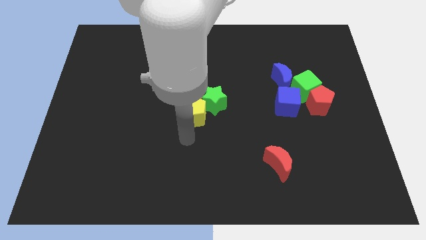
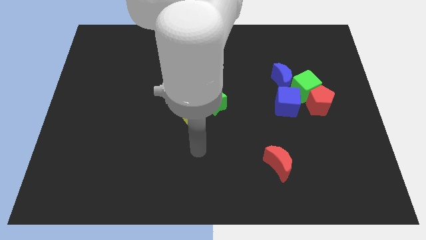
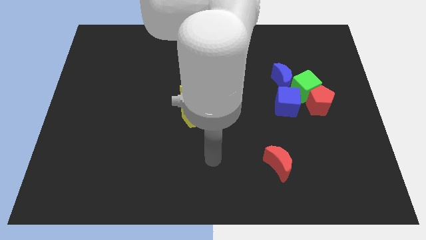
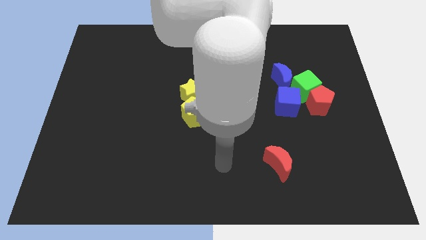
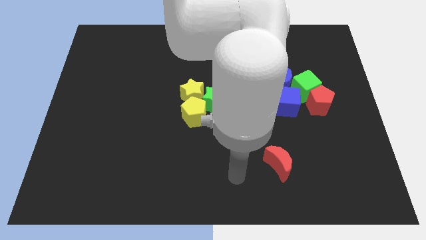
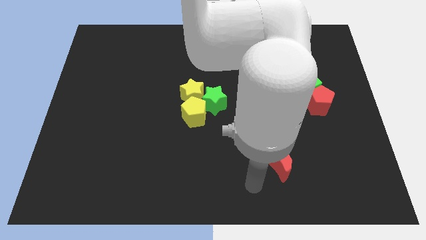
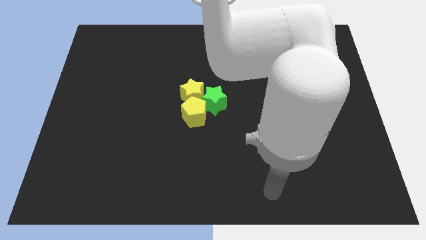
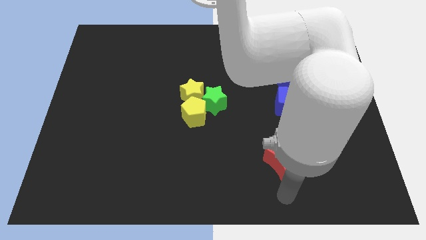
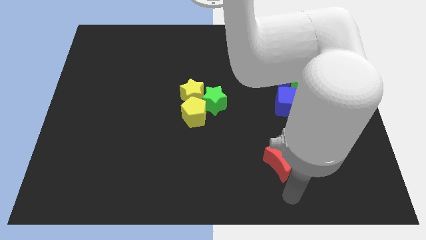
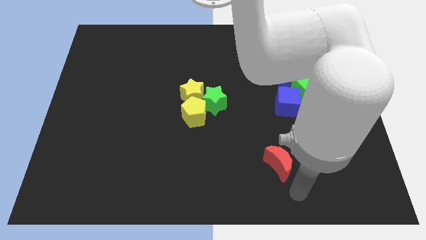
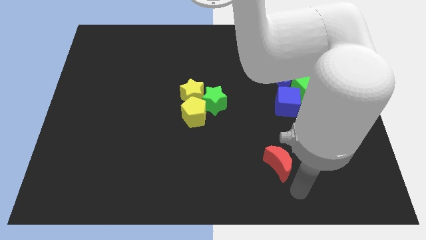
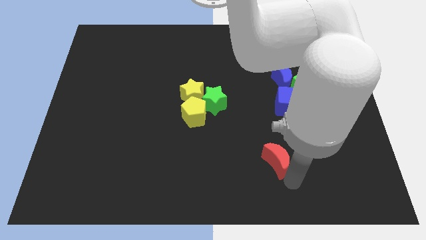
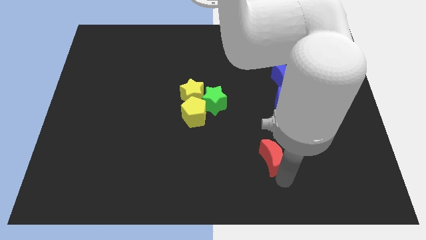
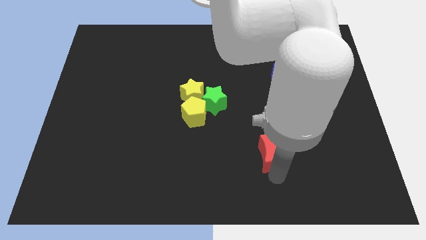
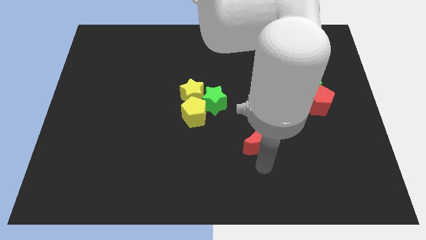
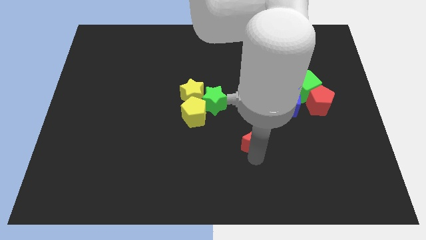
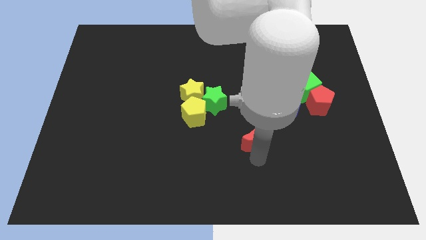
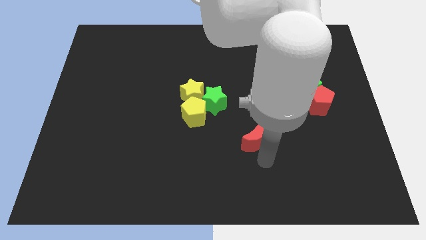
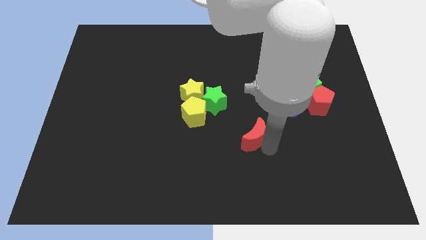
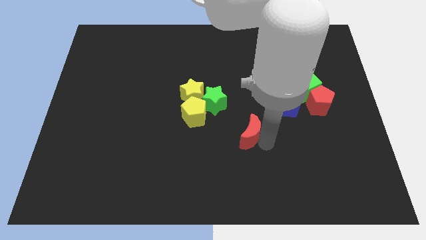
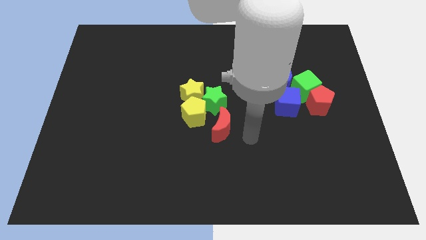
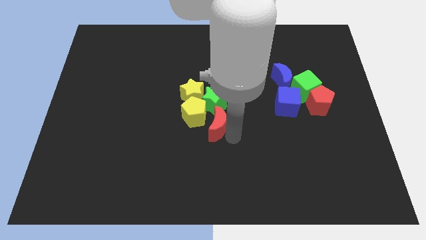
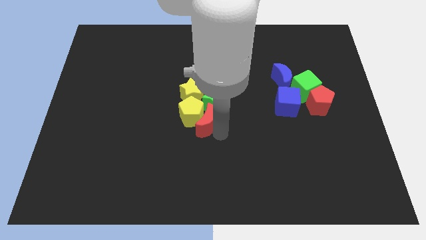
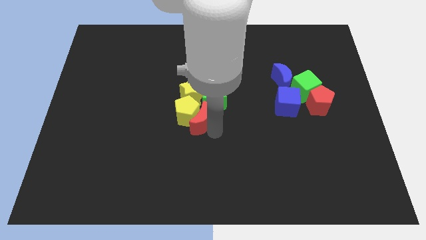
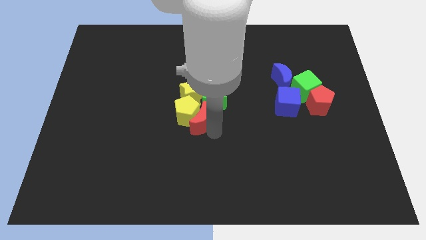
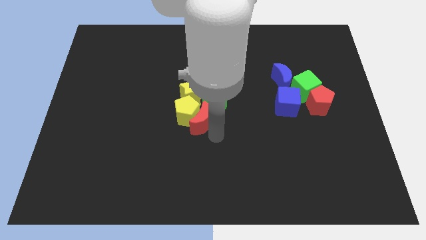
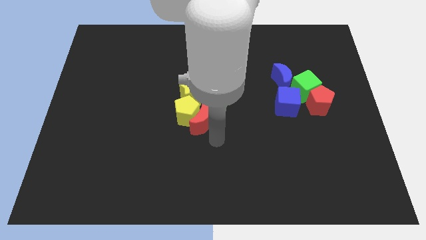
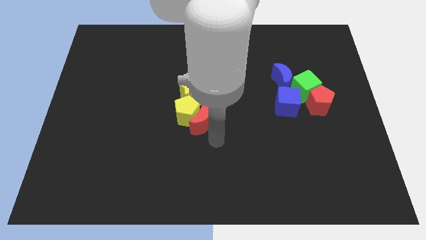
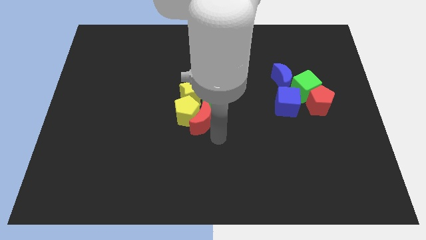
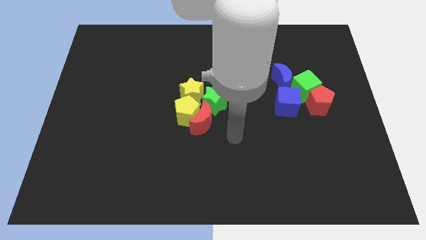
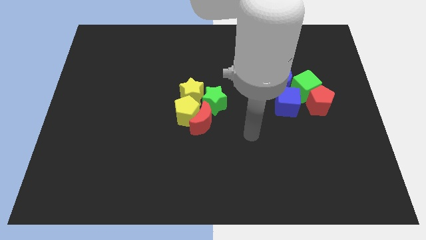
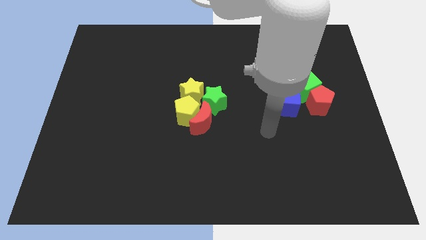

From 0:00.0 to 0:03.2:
slide red moon into yellow pentagon

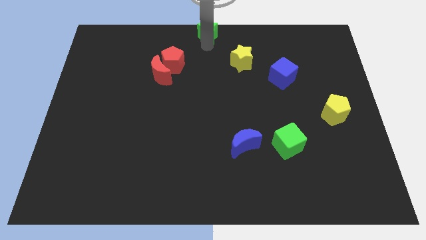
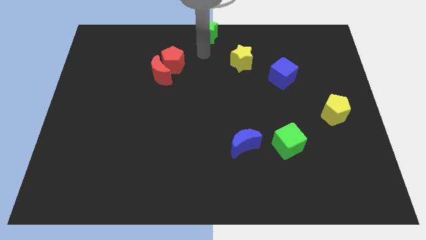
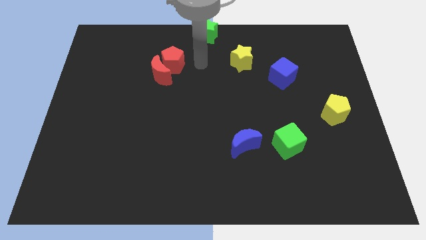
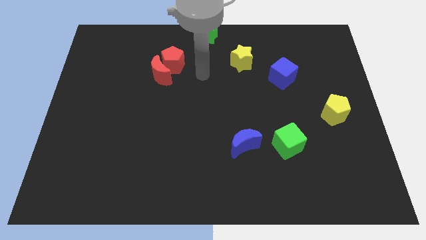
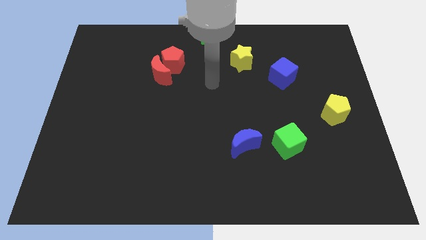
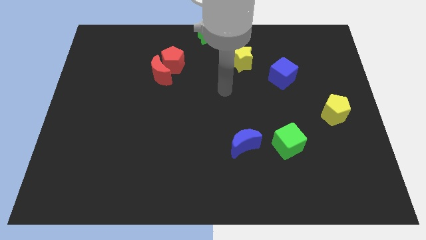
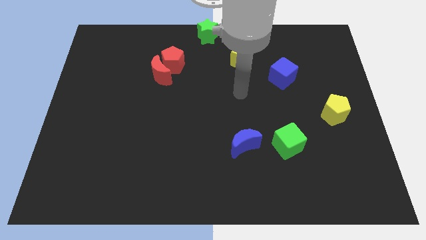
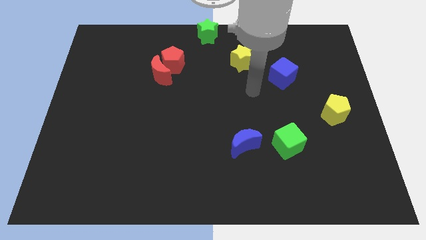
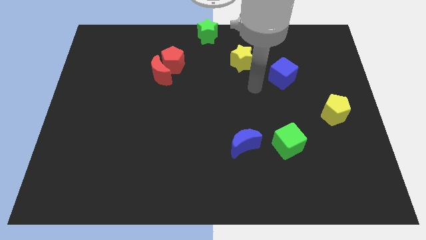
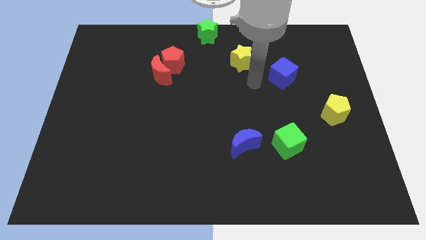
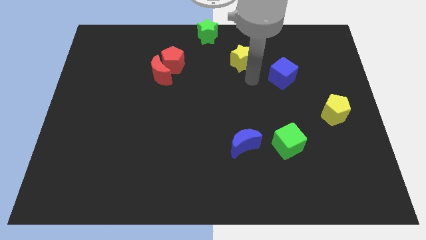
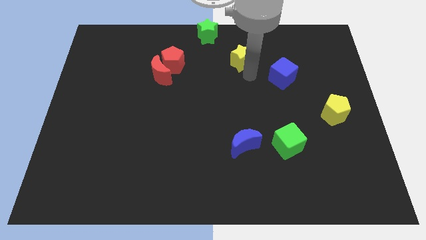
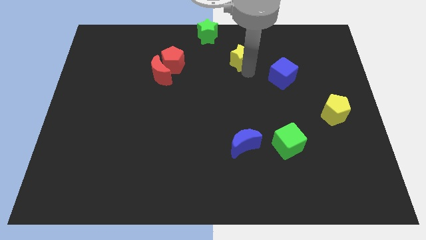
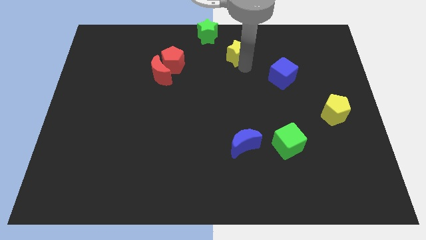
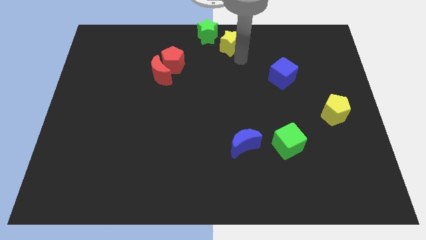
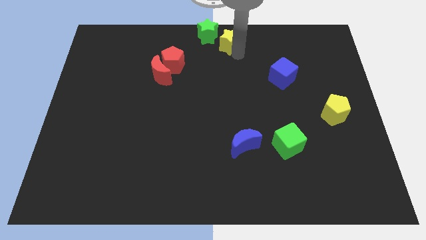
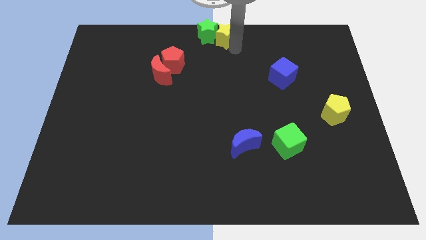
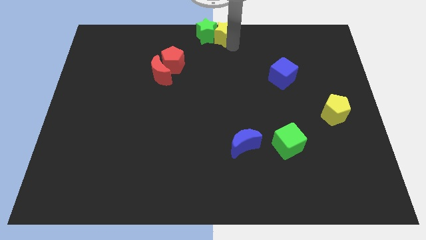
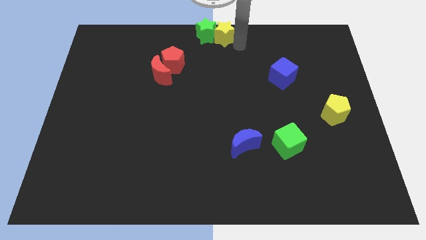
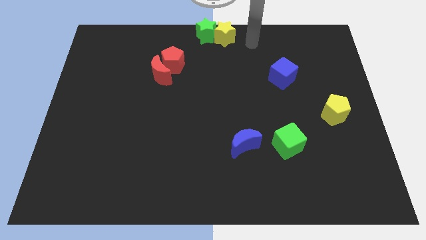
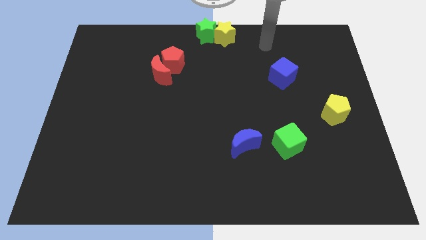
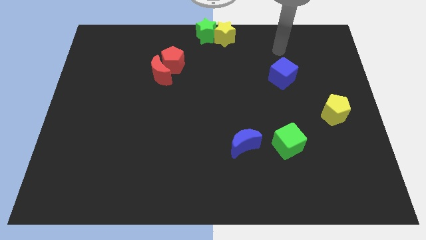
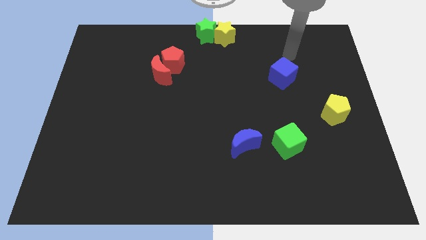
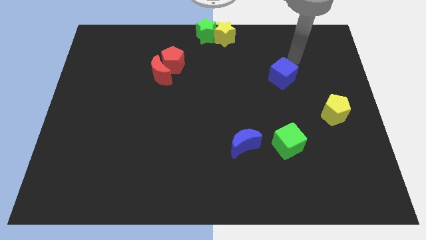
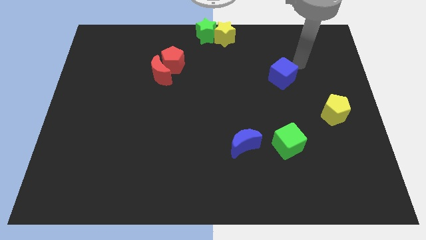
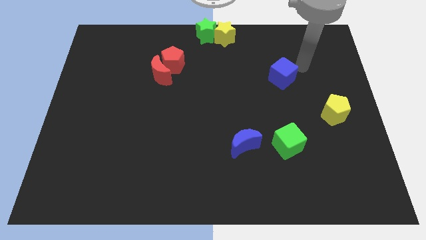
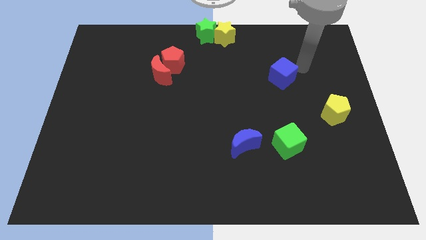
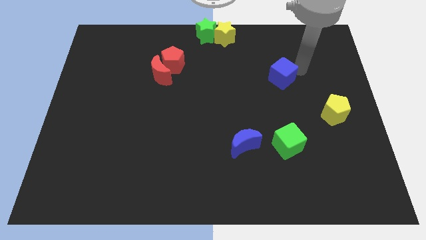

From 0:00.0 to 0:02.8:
place the yellow star at the top center of the board

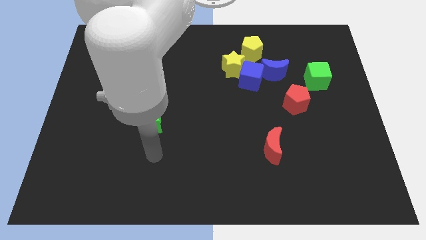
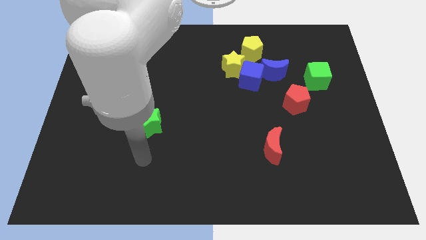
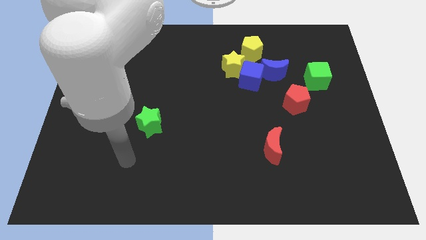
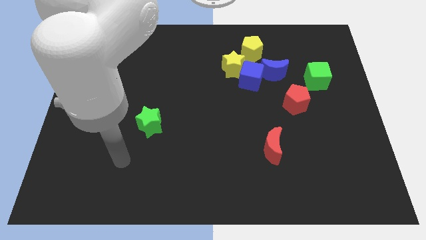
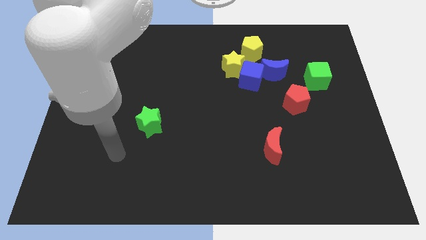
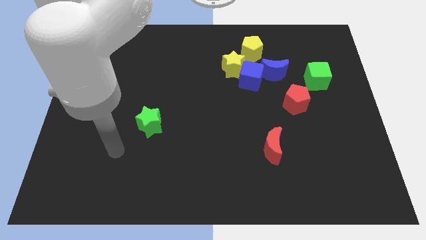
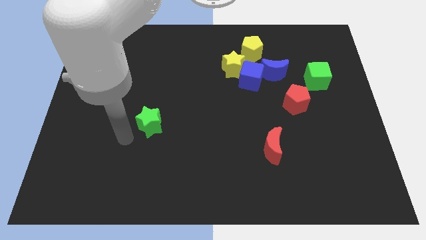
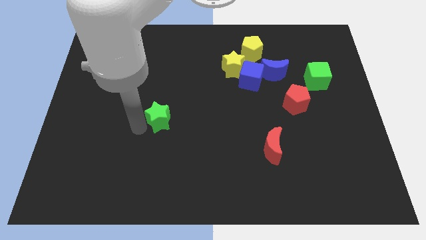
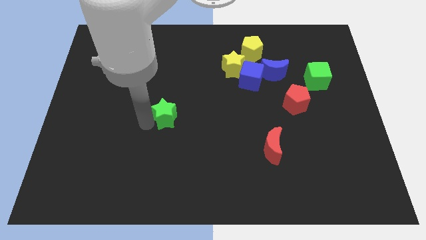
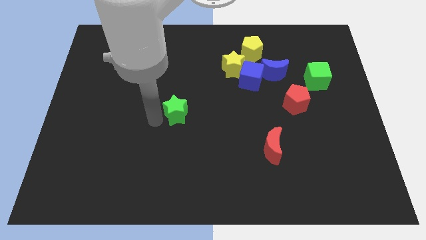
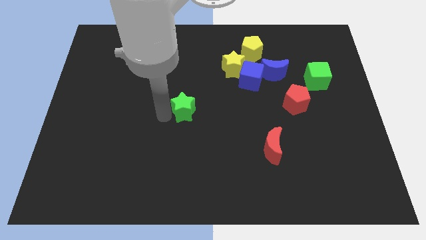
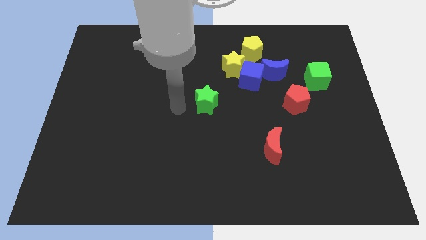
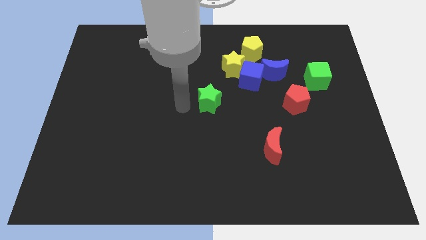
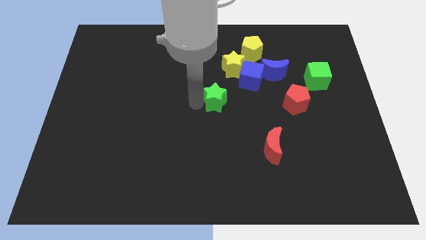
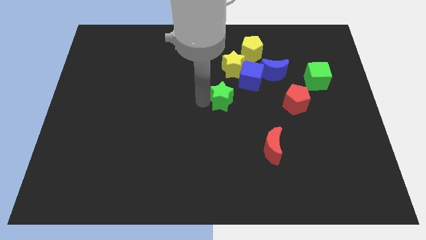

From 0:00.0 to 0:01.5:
move the green star at the center of the board

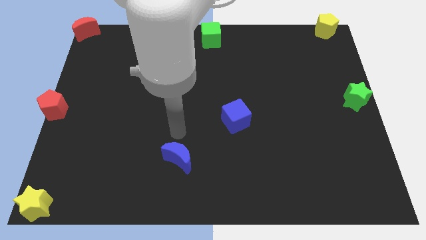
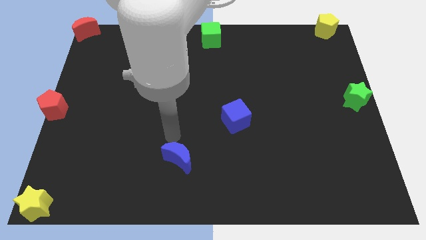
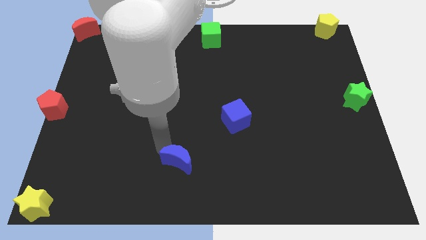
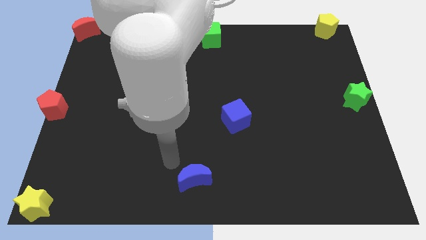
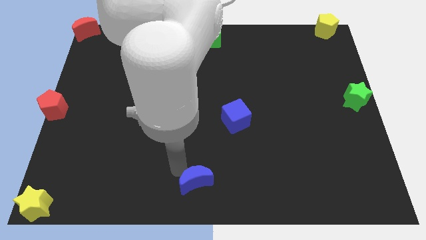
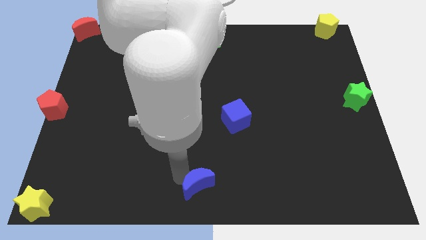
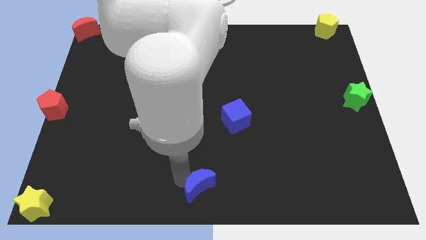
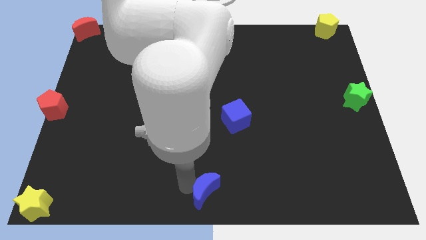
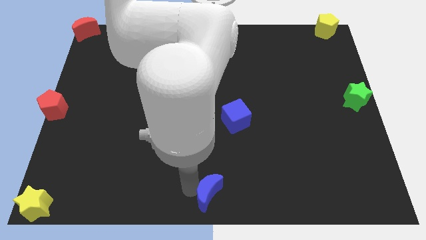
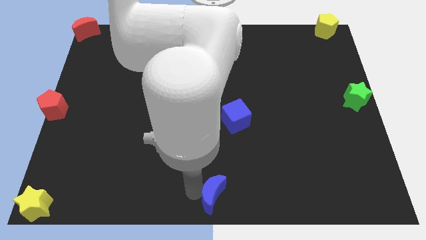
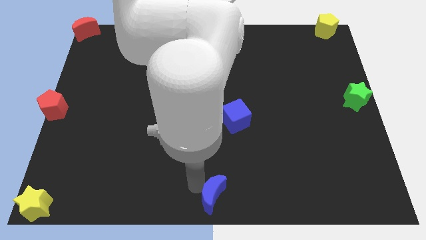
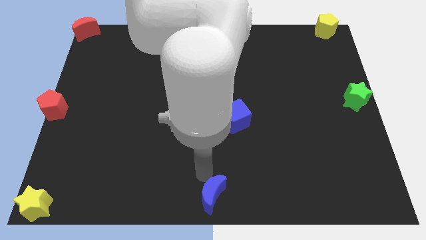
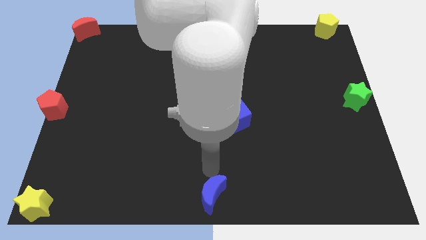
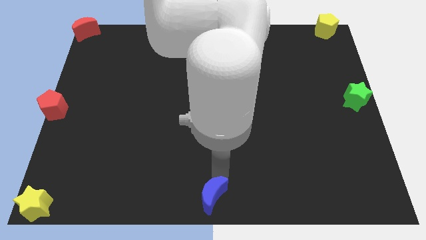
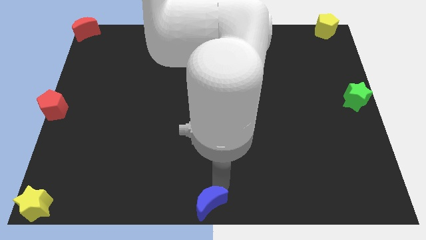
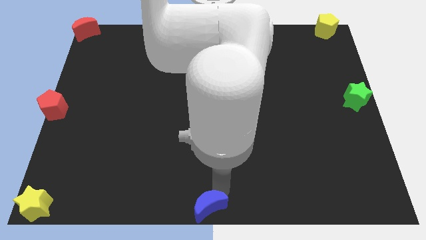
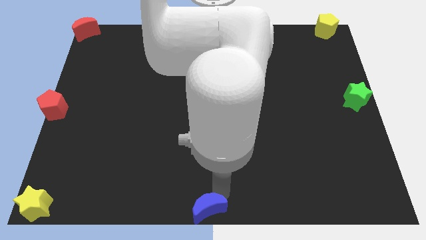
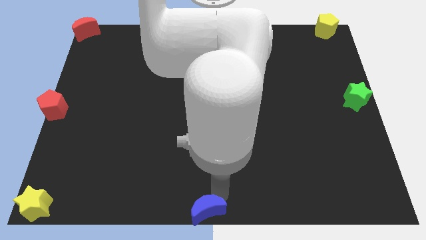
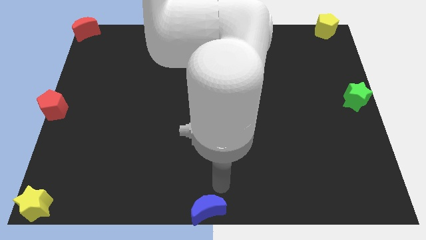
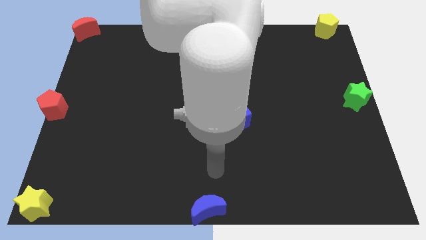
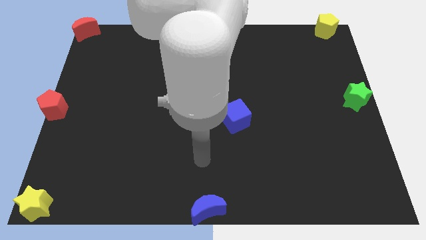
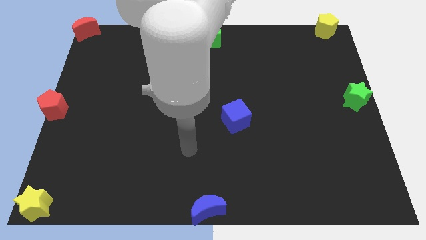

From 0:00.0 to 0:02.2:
drag the blue crescent to the bottom center
